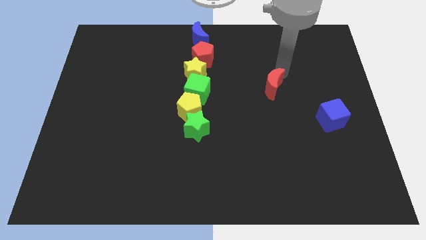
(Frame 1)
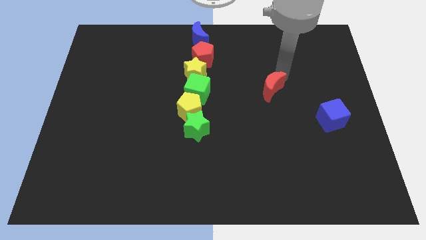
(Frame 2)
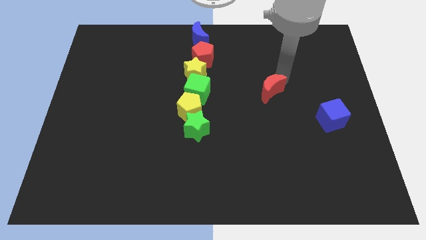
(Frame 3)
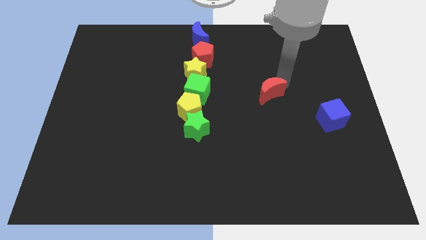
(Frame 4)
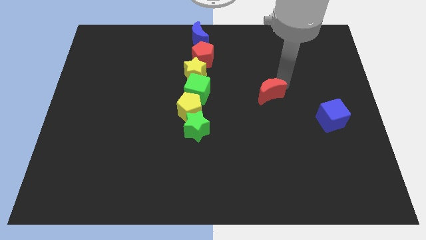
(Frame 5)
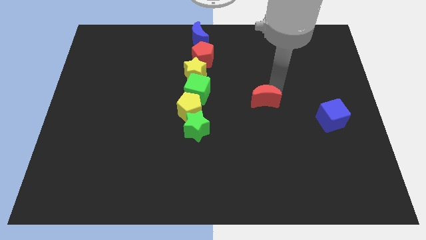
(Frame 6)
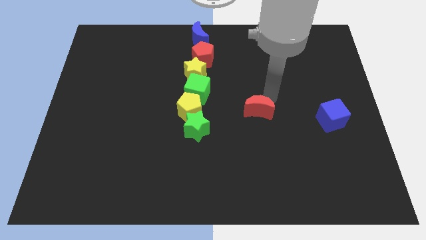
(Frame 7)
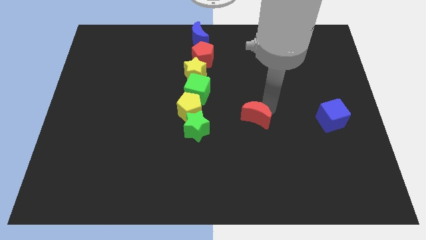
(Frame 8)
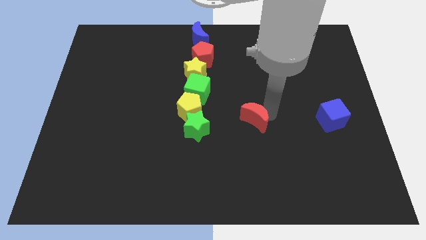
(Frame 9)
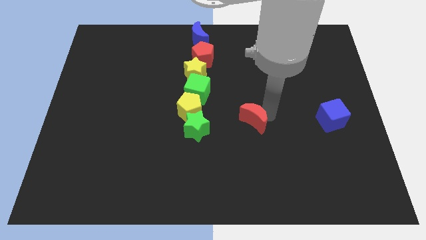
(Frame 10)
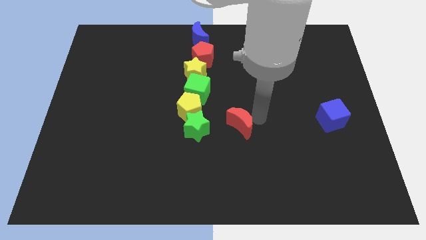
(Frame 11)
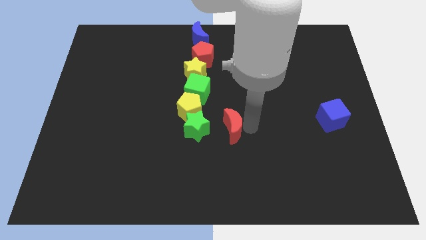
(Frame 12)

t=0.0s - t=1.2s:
place the red moon right to the green star

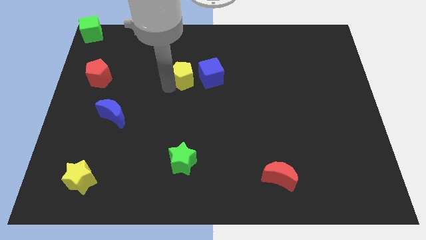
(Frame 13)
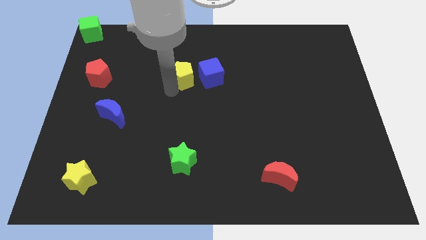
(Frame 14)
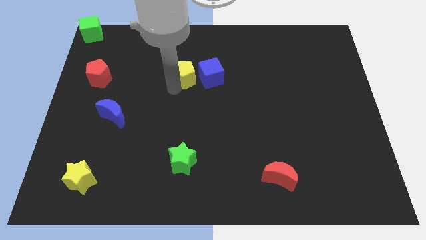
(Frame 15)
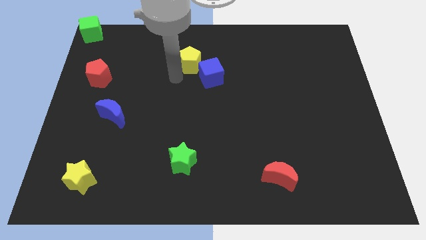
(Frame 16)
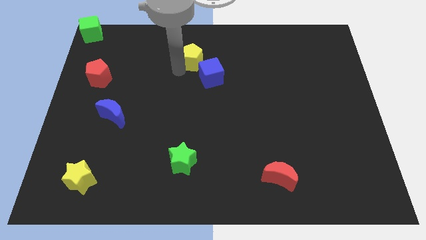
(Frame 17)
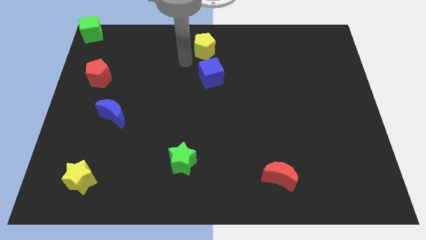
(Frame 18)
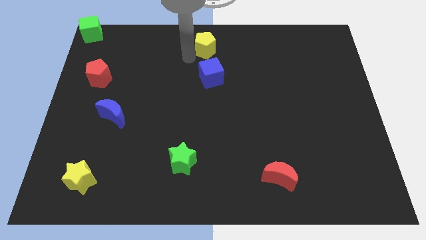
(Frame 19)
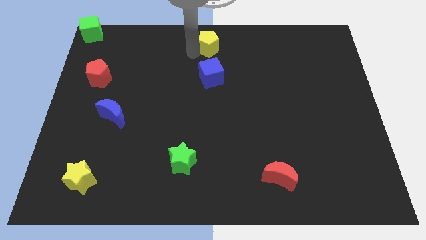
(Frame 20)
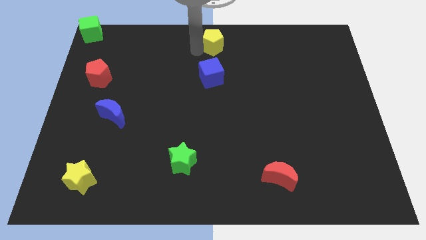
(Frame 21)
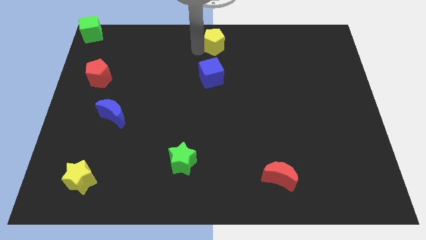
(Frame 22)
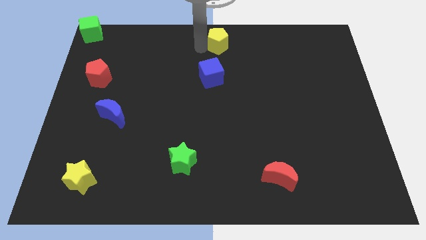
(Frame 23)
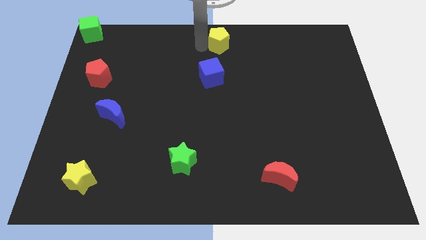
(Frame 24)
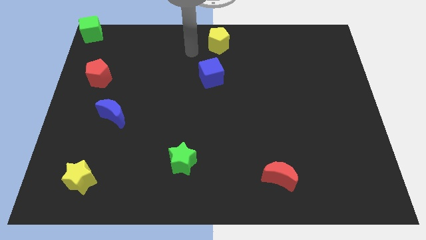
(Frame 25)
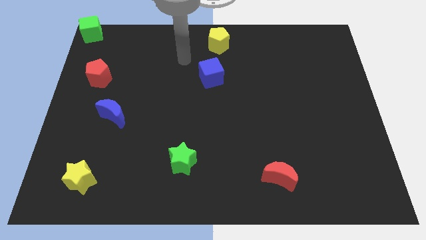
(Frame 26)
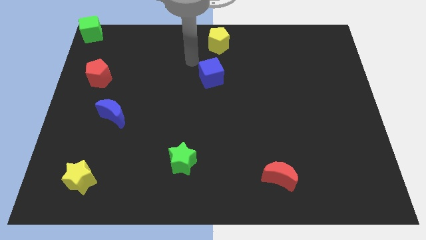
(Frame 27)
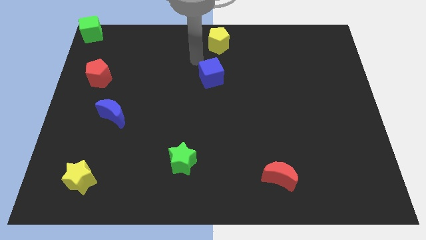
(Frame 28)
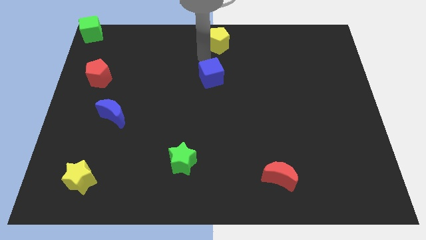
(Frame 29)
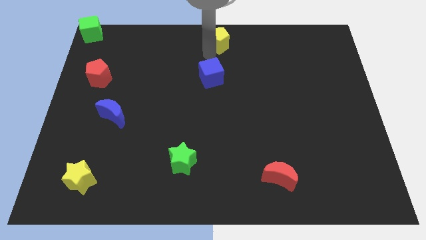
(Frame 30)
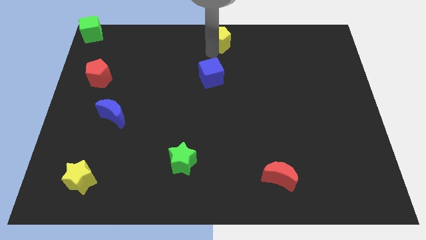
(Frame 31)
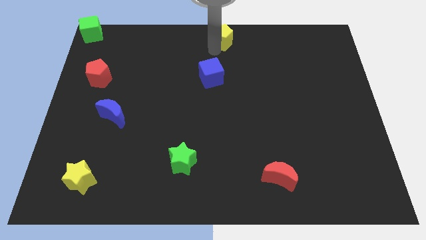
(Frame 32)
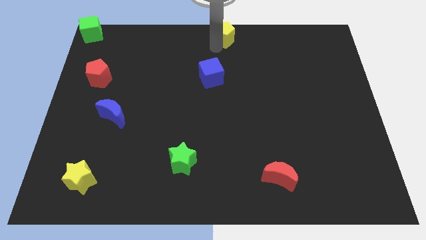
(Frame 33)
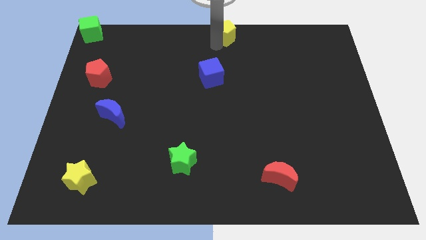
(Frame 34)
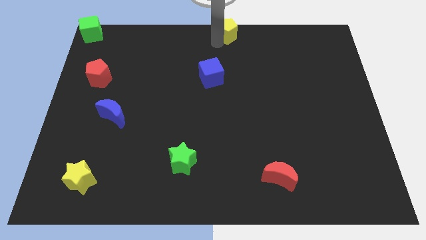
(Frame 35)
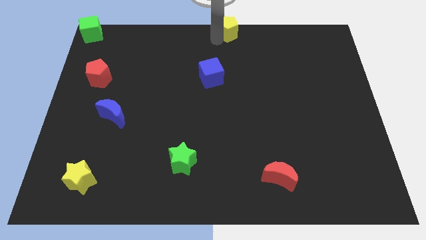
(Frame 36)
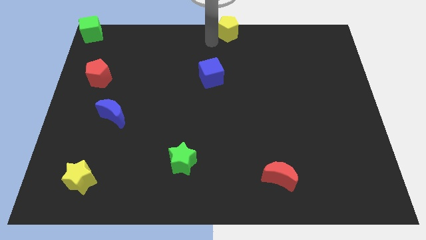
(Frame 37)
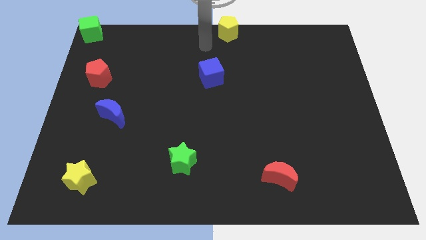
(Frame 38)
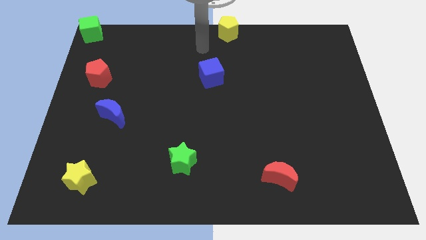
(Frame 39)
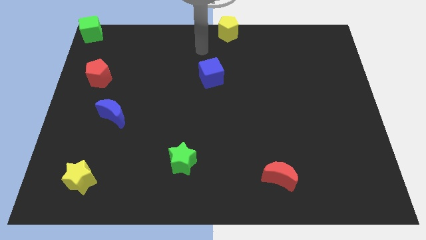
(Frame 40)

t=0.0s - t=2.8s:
push the yellow pentagon to the top center of the board

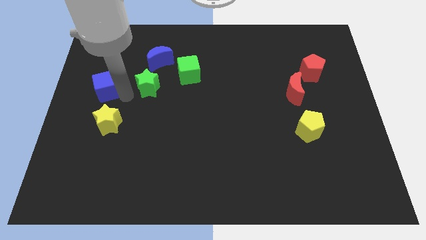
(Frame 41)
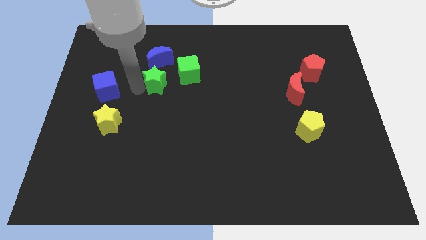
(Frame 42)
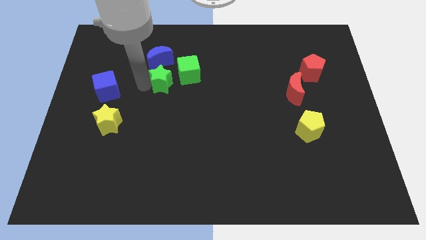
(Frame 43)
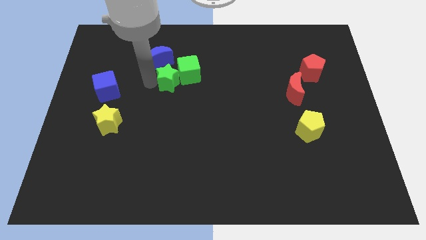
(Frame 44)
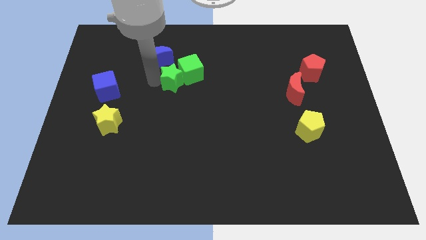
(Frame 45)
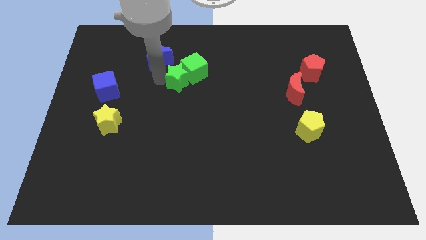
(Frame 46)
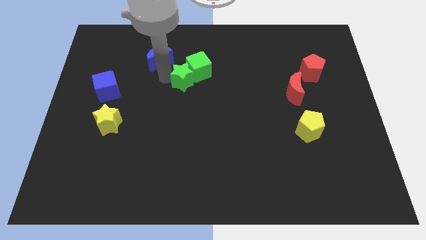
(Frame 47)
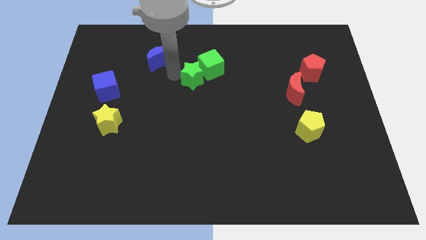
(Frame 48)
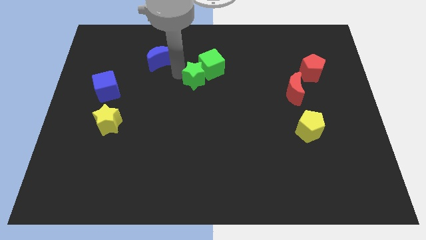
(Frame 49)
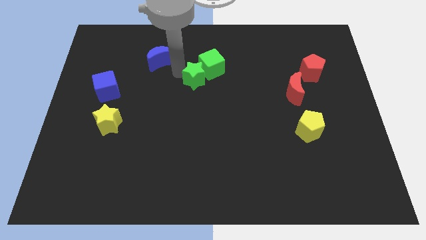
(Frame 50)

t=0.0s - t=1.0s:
move the green star into the green cube

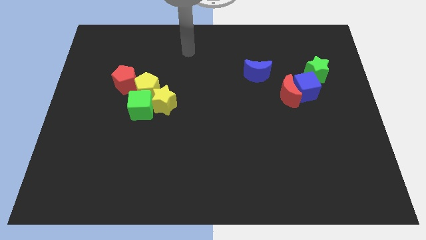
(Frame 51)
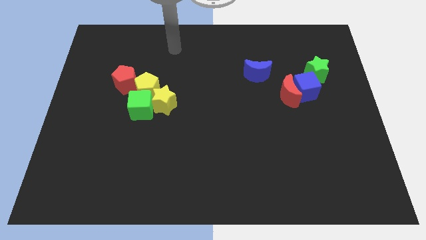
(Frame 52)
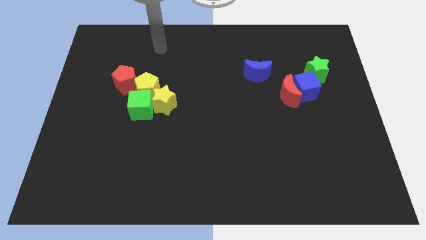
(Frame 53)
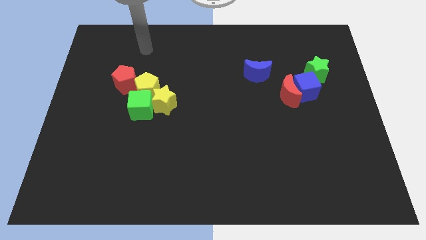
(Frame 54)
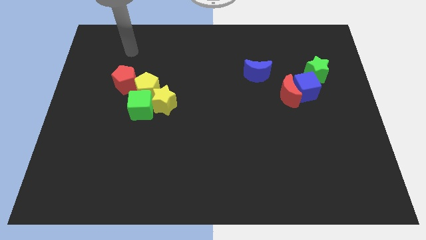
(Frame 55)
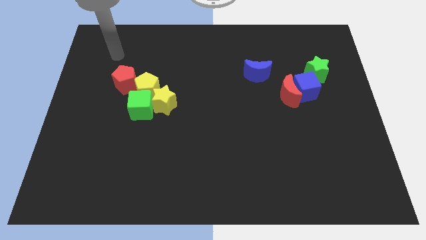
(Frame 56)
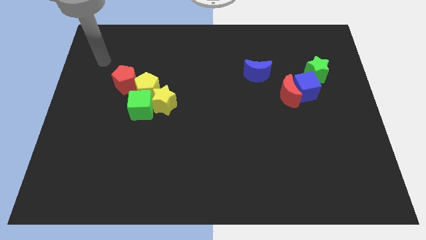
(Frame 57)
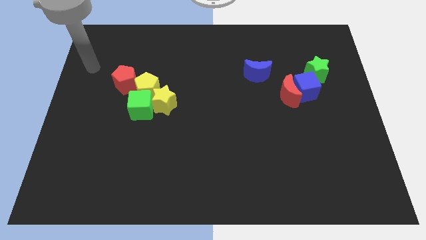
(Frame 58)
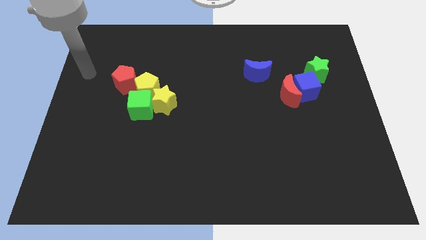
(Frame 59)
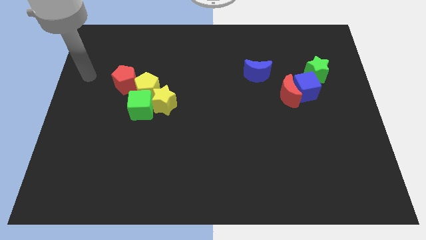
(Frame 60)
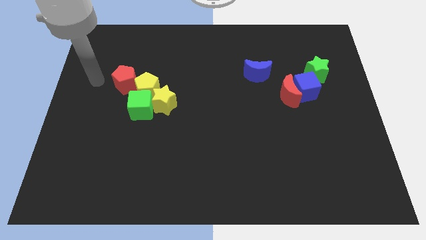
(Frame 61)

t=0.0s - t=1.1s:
slide your arm to the left of red pentagon

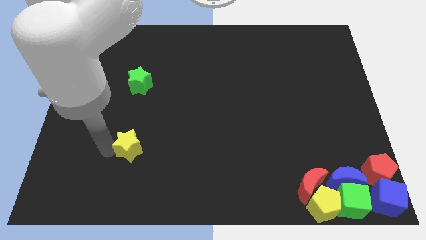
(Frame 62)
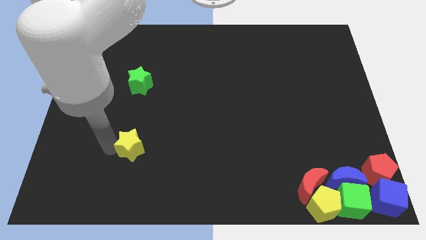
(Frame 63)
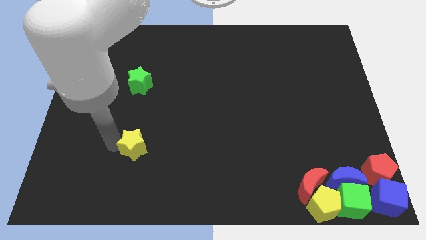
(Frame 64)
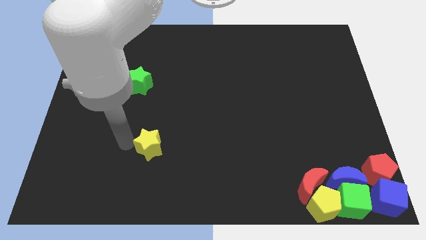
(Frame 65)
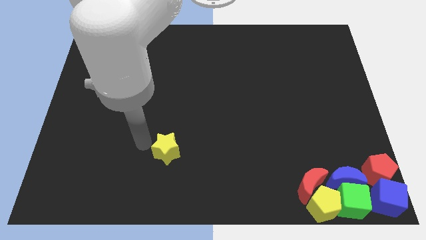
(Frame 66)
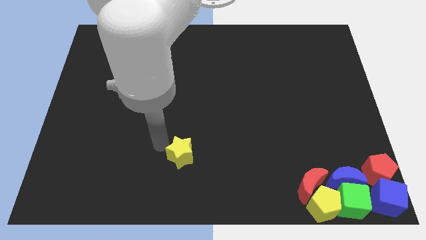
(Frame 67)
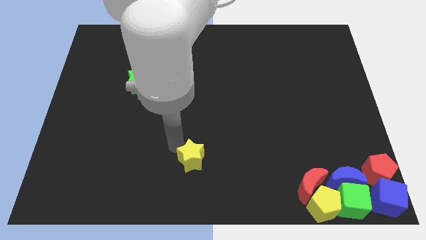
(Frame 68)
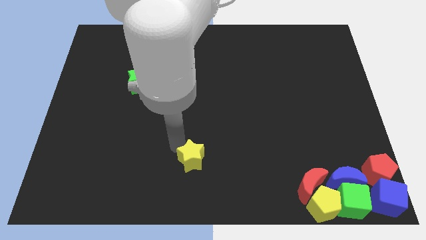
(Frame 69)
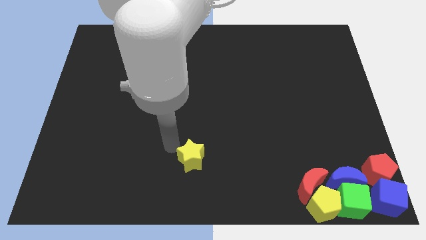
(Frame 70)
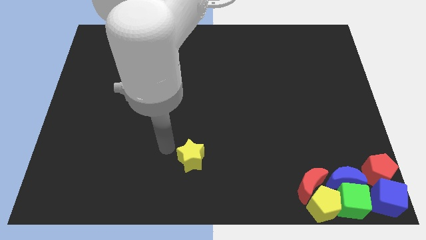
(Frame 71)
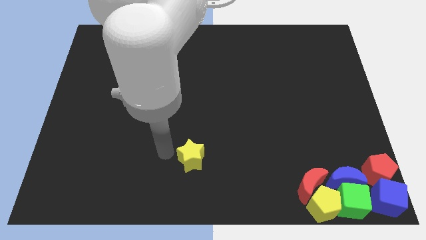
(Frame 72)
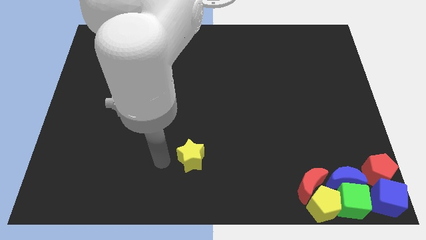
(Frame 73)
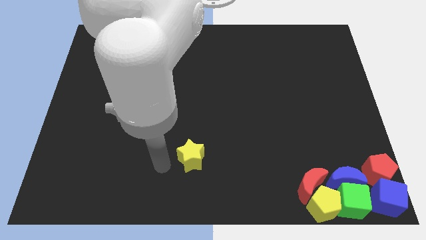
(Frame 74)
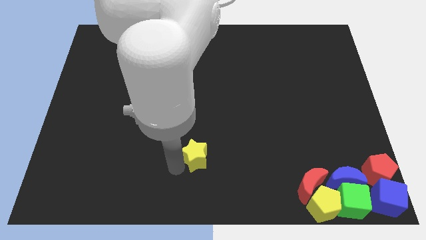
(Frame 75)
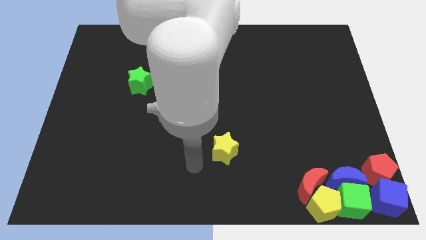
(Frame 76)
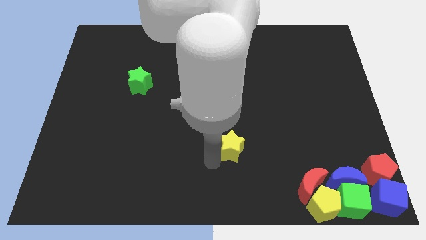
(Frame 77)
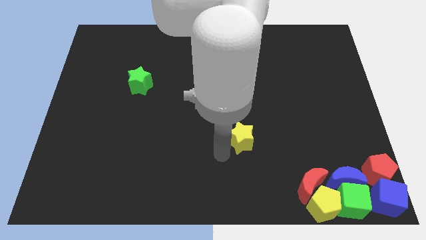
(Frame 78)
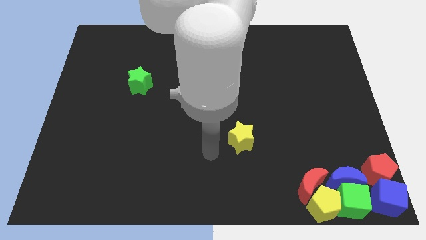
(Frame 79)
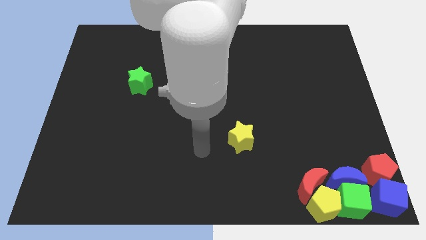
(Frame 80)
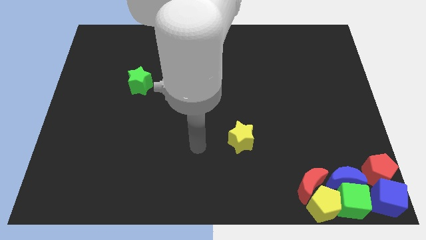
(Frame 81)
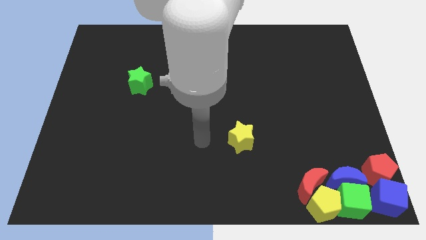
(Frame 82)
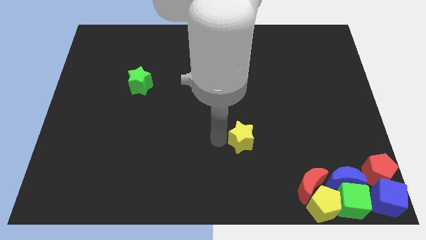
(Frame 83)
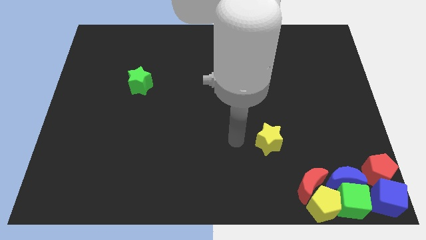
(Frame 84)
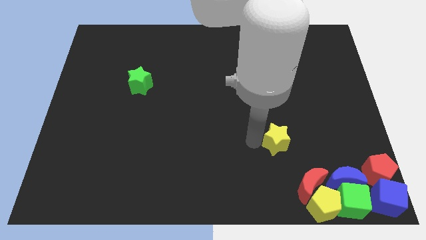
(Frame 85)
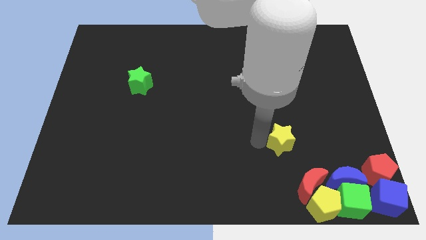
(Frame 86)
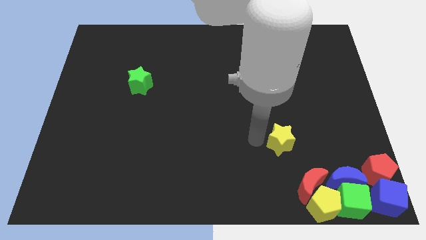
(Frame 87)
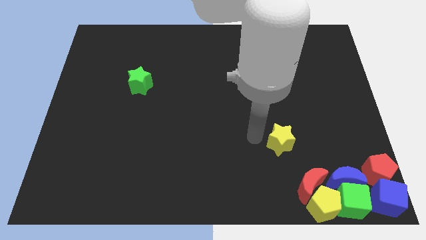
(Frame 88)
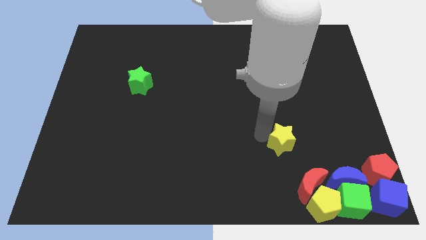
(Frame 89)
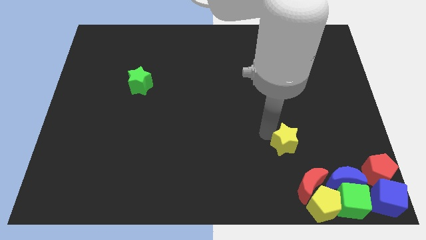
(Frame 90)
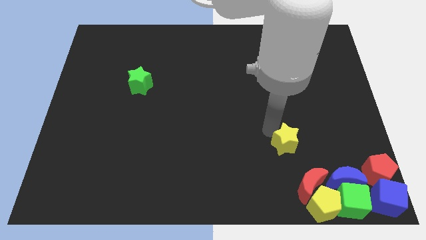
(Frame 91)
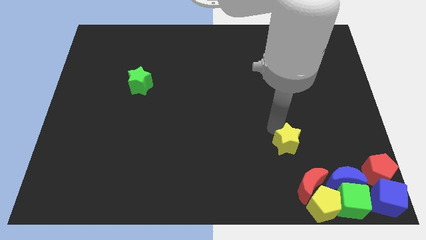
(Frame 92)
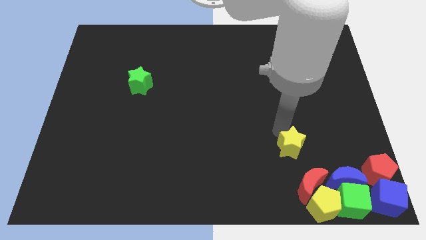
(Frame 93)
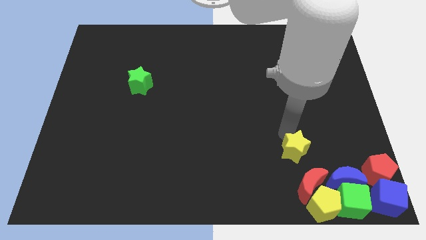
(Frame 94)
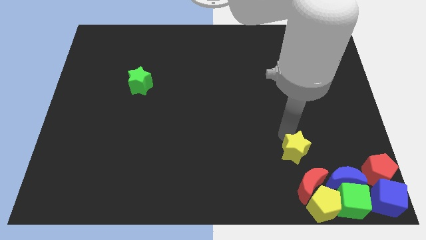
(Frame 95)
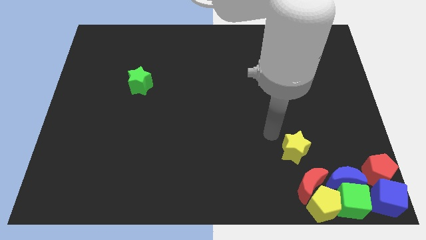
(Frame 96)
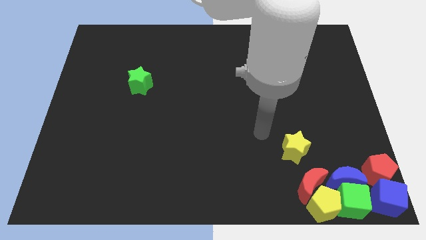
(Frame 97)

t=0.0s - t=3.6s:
place the yellow star at the top left side of red moon
